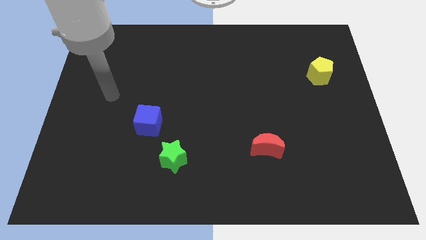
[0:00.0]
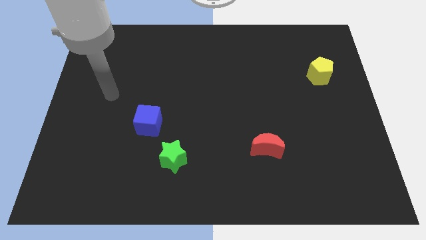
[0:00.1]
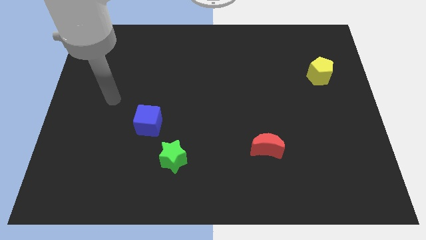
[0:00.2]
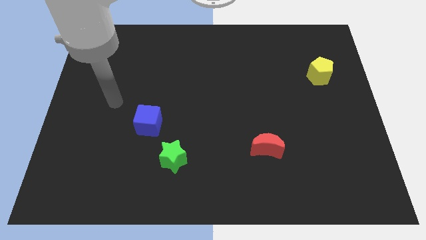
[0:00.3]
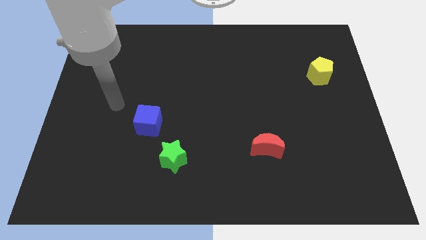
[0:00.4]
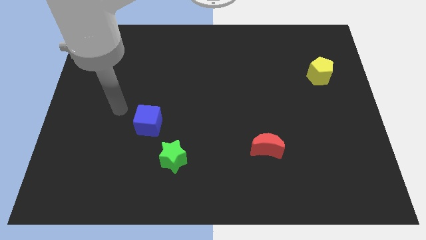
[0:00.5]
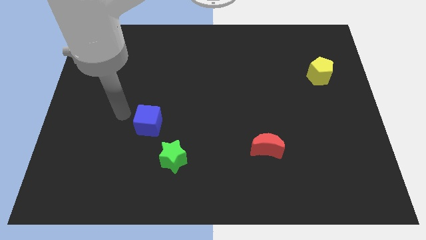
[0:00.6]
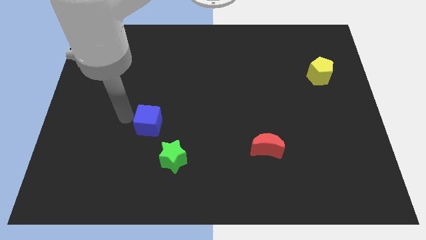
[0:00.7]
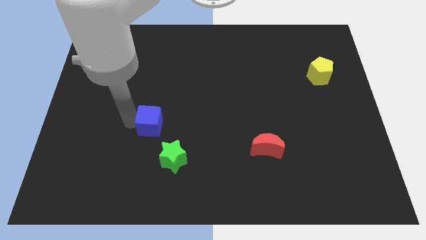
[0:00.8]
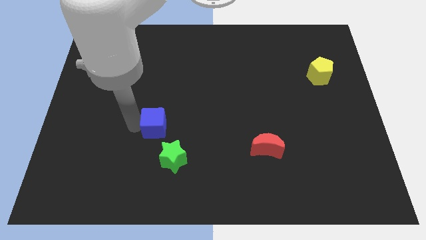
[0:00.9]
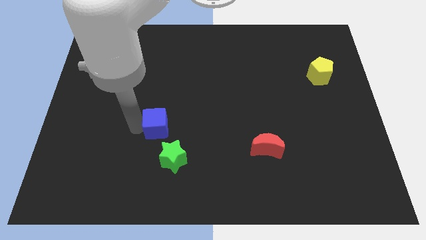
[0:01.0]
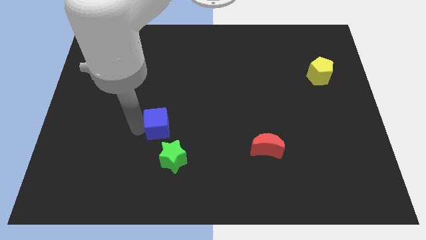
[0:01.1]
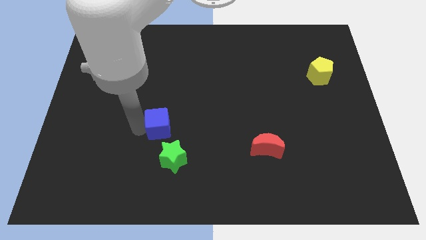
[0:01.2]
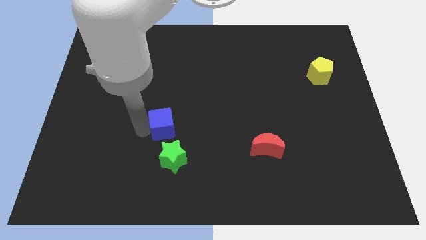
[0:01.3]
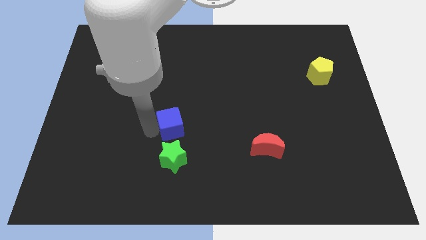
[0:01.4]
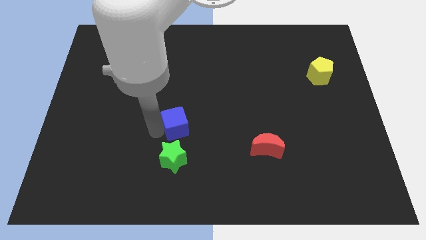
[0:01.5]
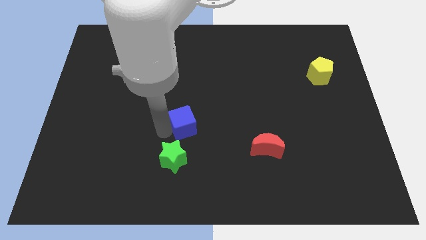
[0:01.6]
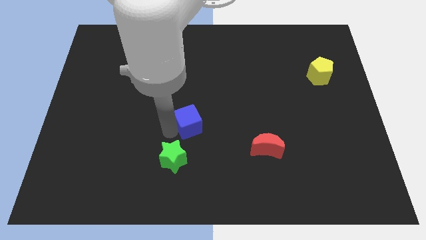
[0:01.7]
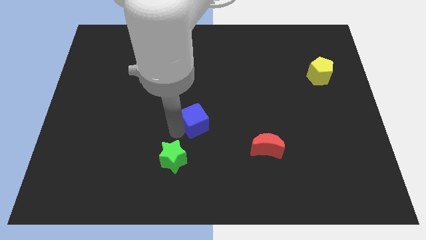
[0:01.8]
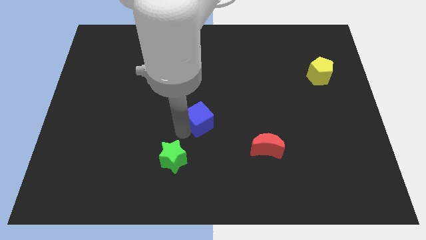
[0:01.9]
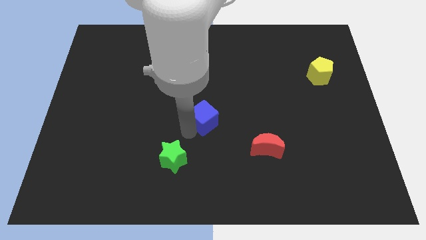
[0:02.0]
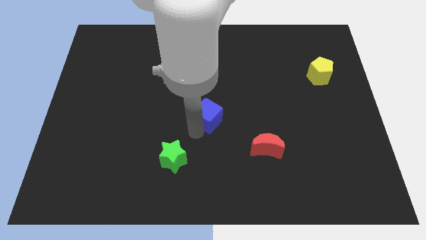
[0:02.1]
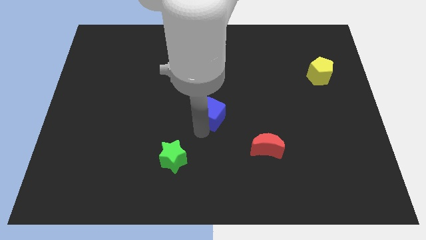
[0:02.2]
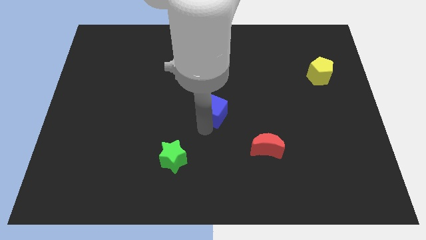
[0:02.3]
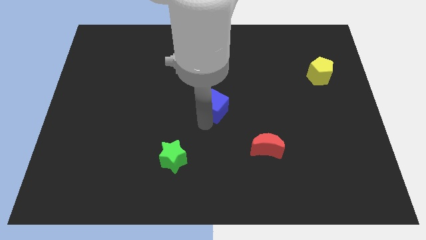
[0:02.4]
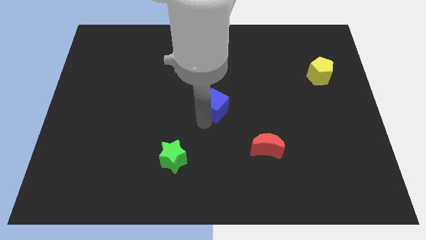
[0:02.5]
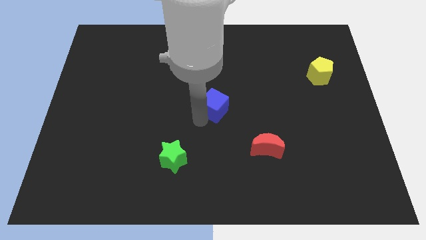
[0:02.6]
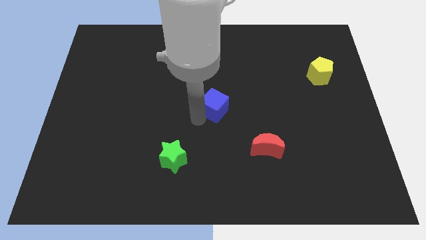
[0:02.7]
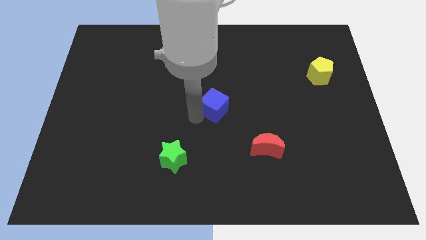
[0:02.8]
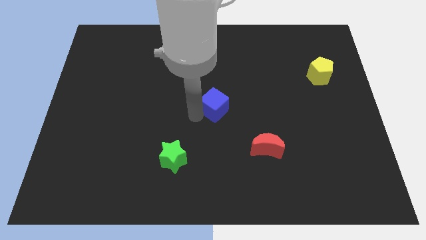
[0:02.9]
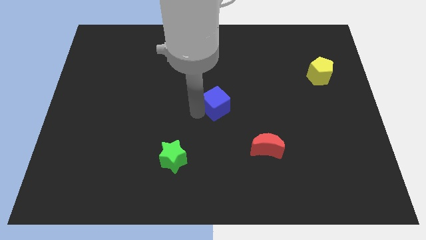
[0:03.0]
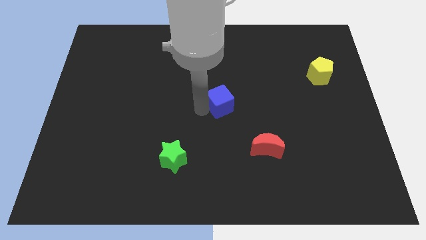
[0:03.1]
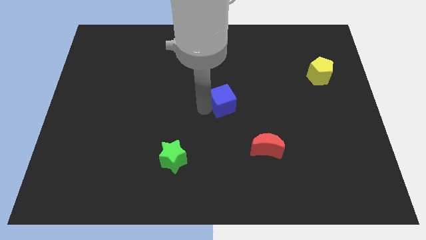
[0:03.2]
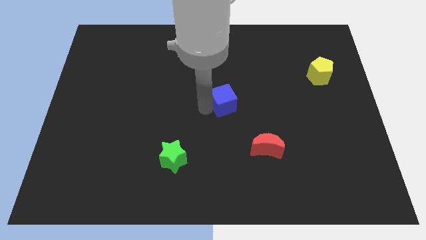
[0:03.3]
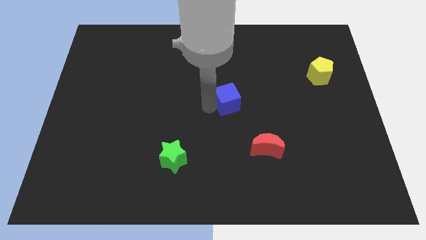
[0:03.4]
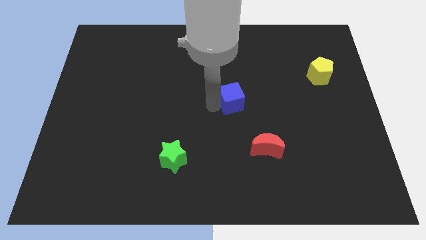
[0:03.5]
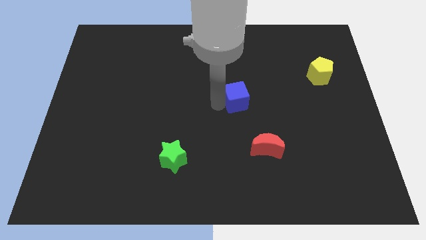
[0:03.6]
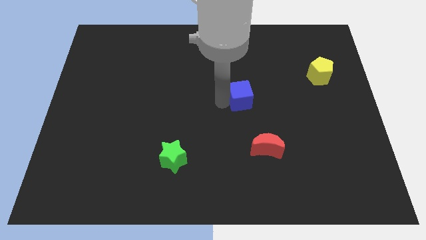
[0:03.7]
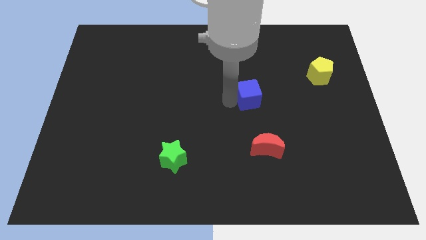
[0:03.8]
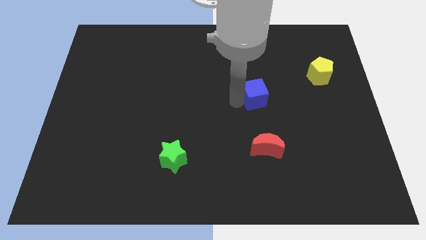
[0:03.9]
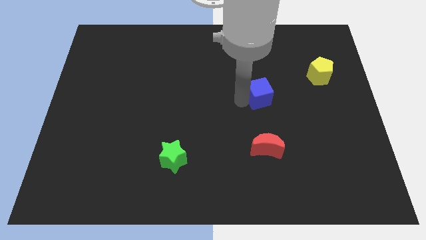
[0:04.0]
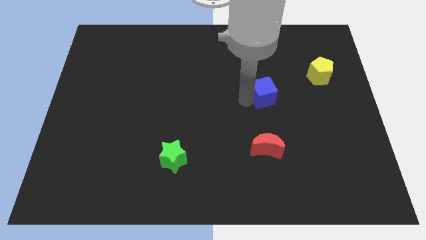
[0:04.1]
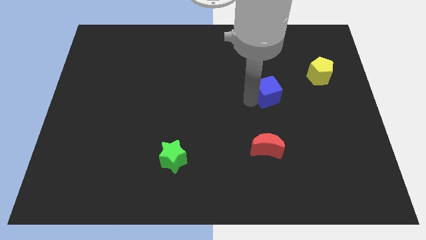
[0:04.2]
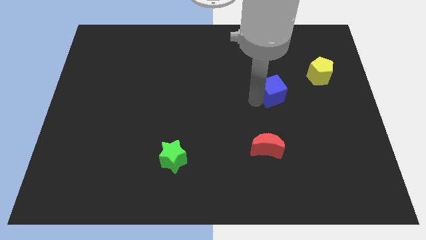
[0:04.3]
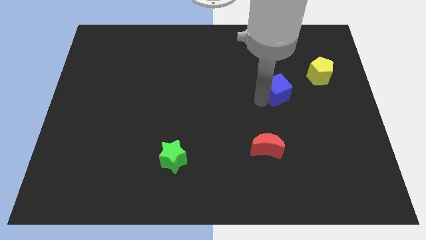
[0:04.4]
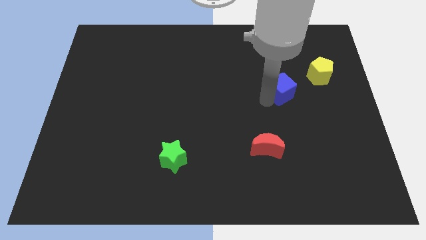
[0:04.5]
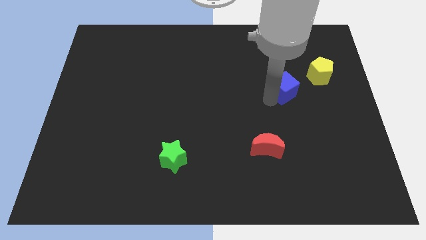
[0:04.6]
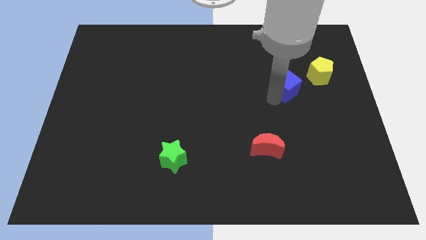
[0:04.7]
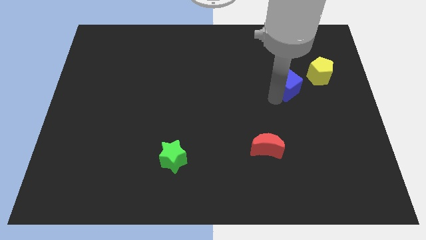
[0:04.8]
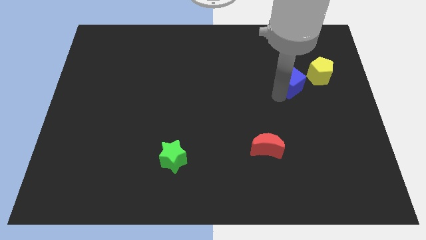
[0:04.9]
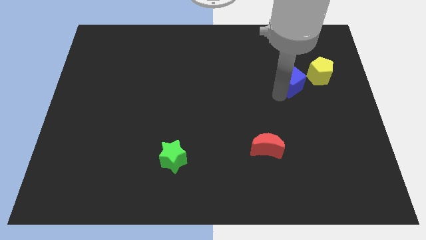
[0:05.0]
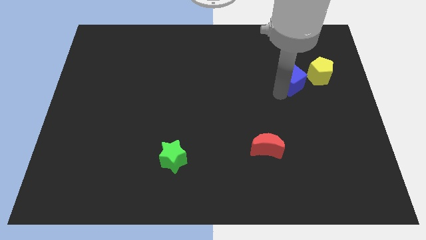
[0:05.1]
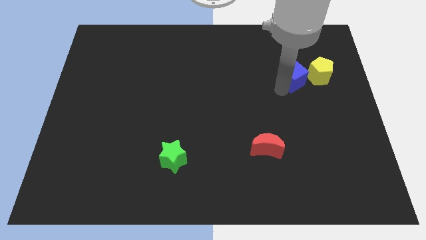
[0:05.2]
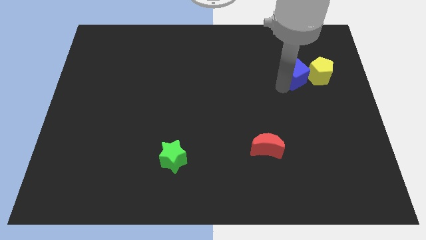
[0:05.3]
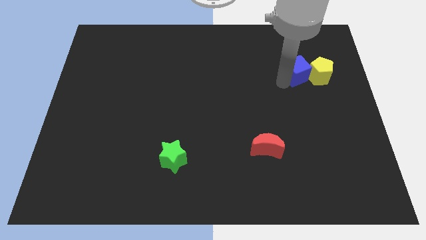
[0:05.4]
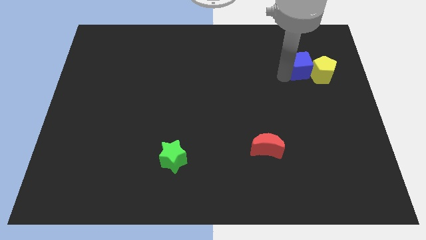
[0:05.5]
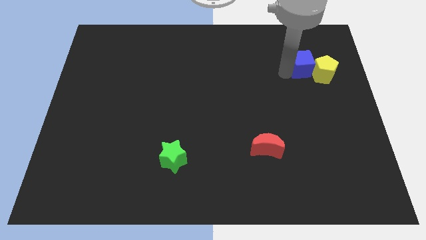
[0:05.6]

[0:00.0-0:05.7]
put the cube towards the yellow block

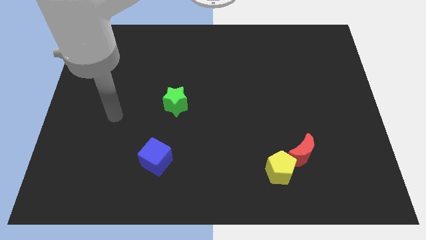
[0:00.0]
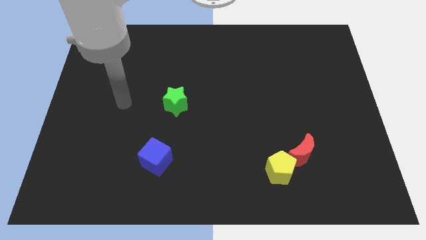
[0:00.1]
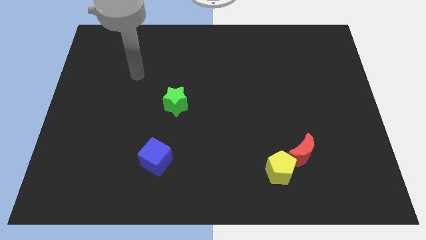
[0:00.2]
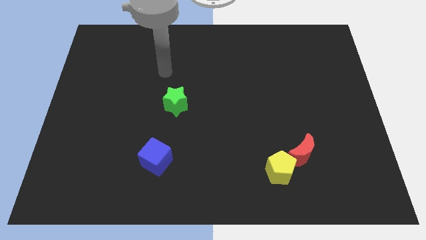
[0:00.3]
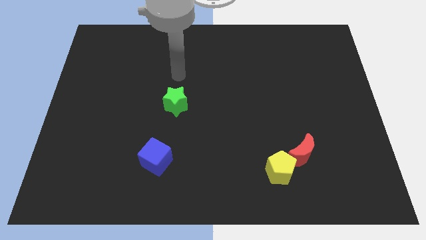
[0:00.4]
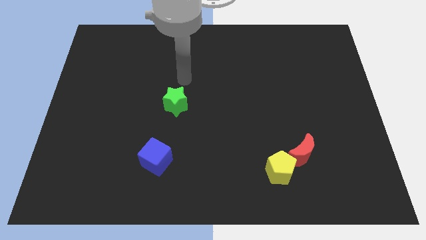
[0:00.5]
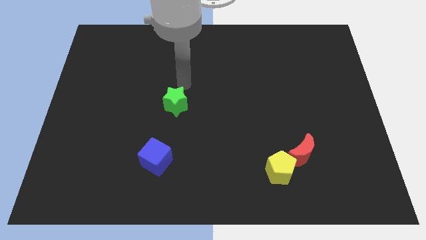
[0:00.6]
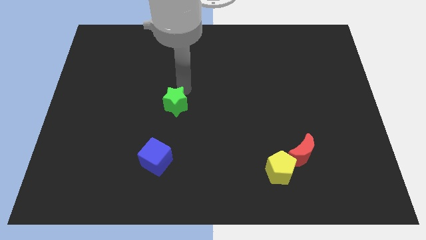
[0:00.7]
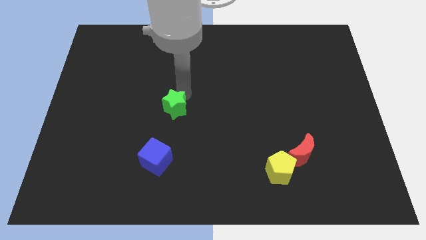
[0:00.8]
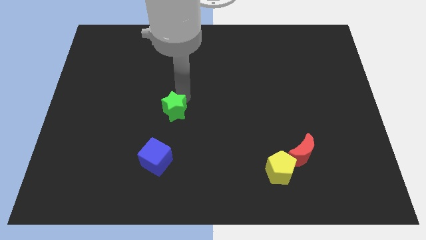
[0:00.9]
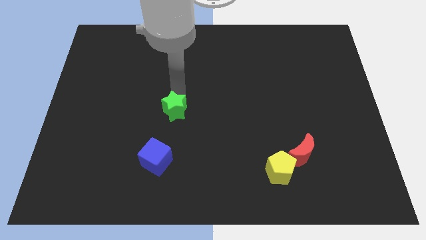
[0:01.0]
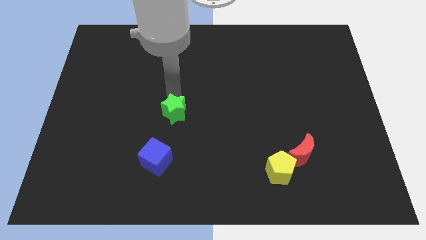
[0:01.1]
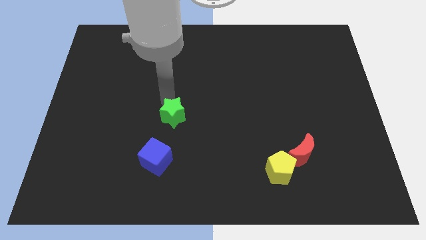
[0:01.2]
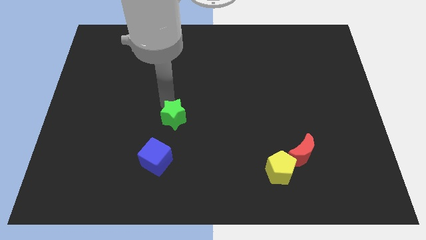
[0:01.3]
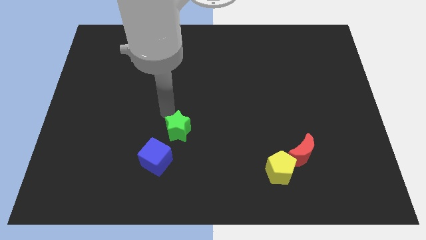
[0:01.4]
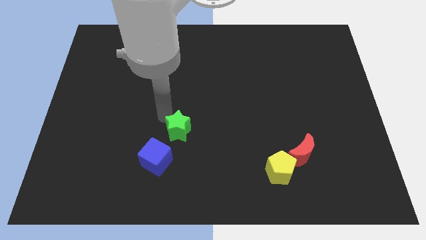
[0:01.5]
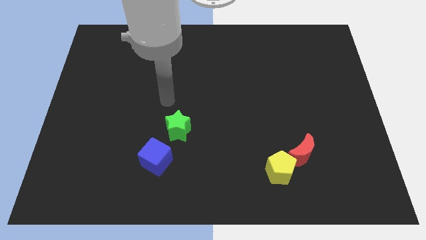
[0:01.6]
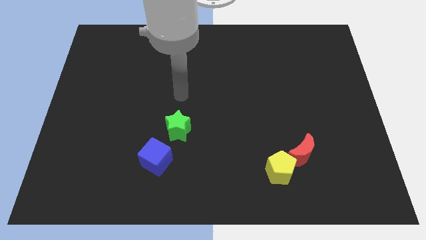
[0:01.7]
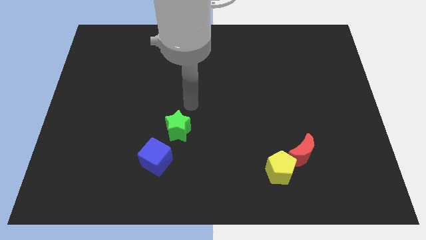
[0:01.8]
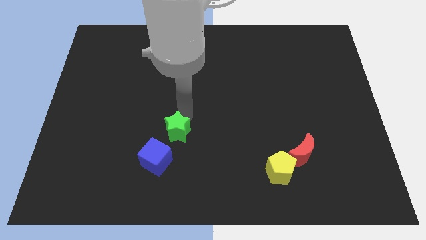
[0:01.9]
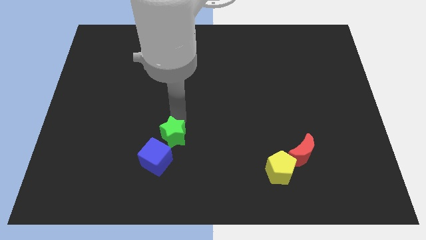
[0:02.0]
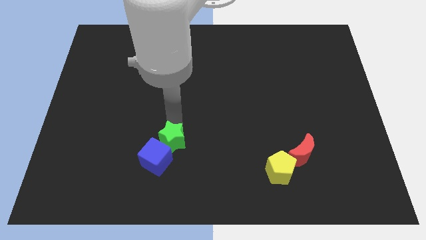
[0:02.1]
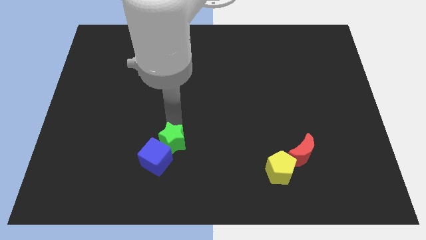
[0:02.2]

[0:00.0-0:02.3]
slide the green star towards the blue cube

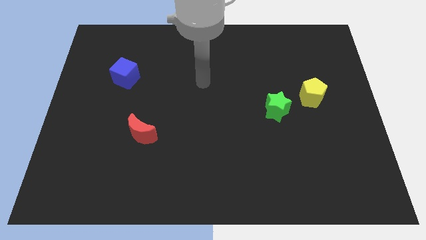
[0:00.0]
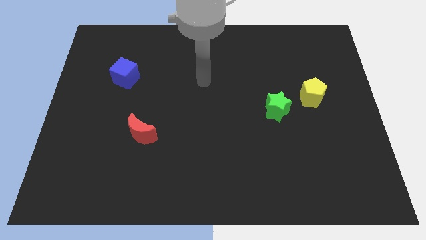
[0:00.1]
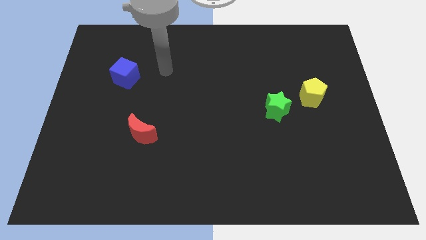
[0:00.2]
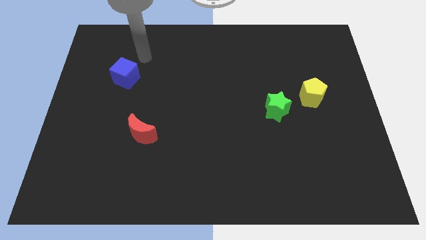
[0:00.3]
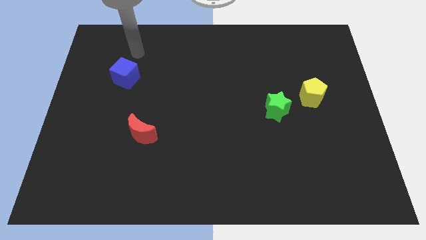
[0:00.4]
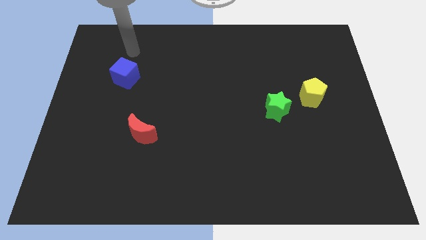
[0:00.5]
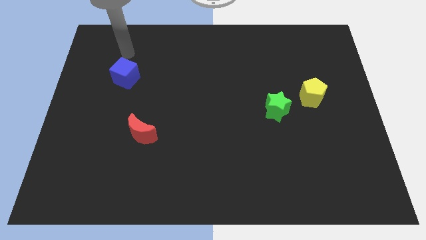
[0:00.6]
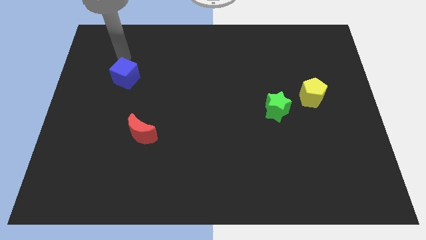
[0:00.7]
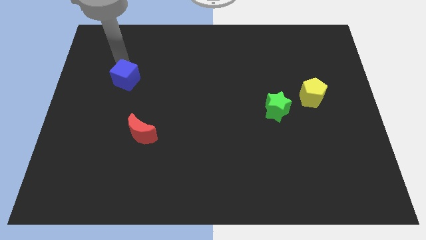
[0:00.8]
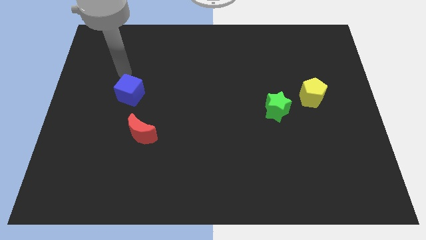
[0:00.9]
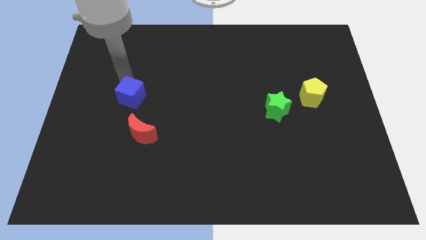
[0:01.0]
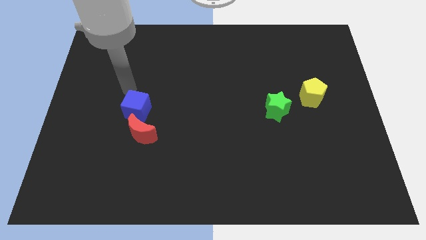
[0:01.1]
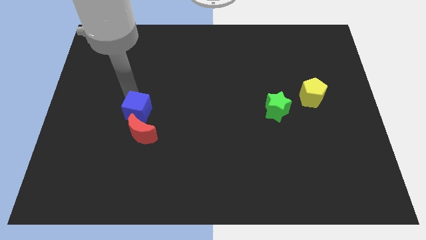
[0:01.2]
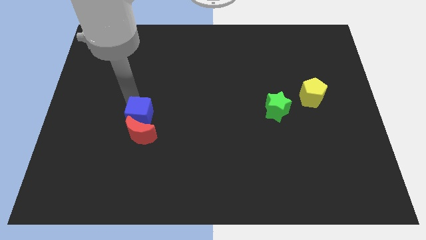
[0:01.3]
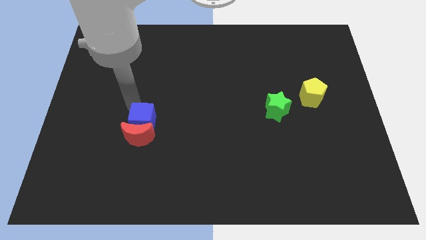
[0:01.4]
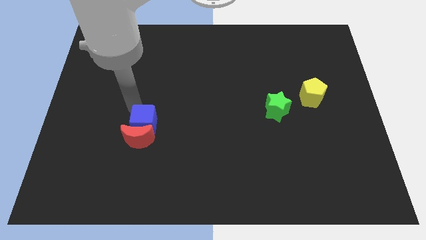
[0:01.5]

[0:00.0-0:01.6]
slide the blue block towards the red block
